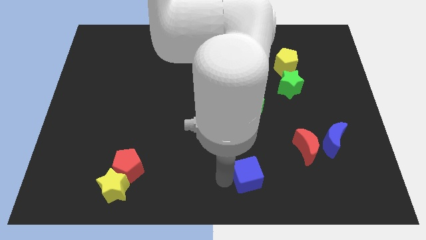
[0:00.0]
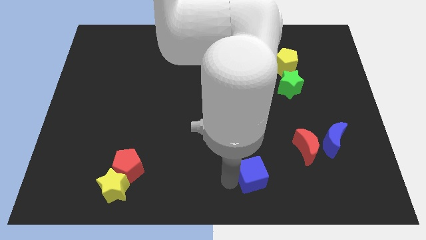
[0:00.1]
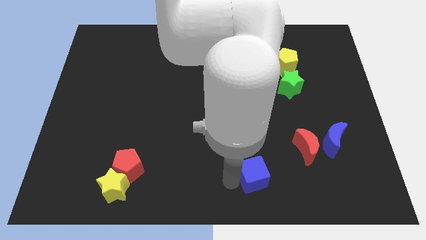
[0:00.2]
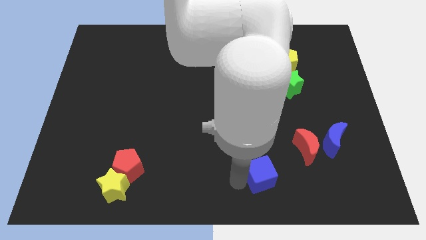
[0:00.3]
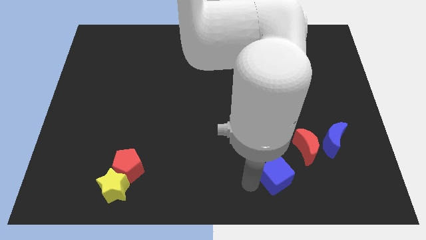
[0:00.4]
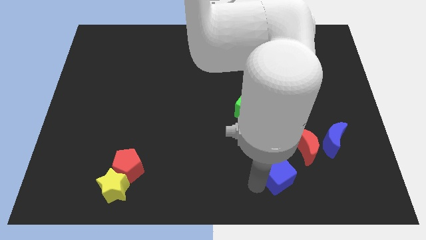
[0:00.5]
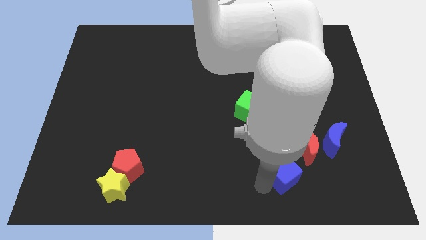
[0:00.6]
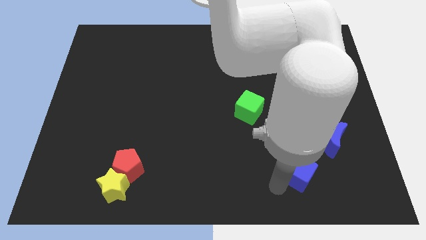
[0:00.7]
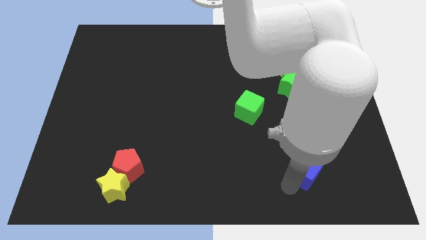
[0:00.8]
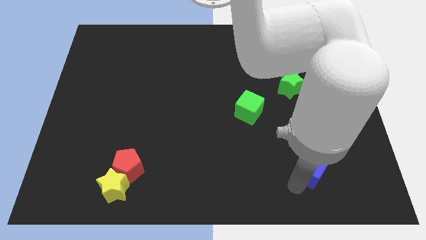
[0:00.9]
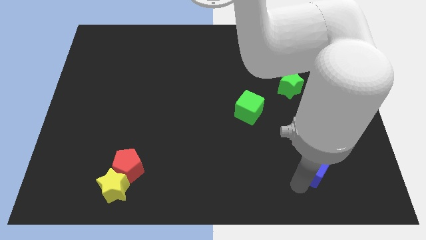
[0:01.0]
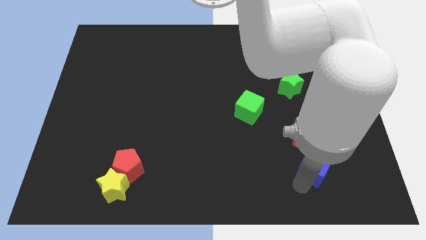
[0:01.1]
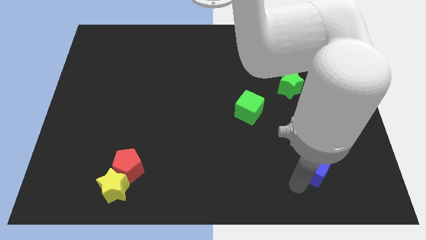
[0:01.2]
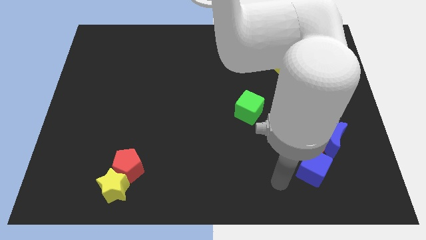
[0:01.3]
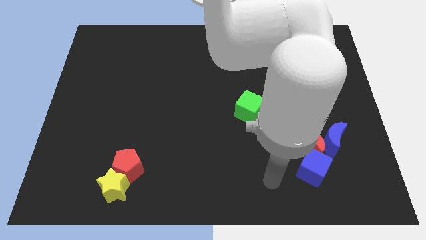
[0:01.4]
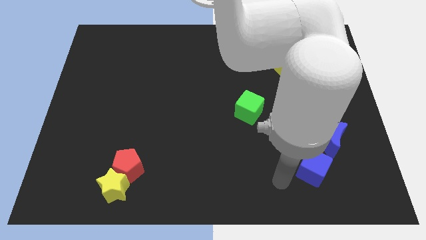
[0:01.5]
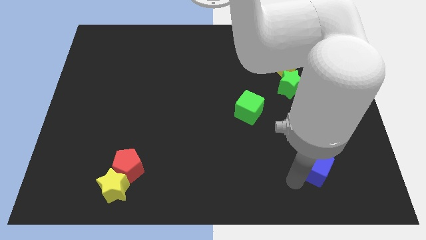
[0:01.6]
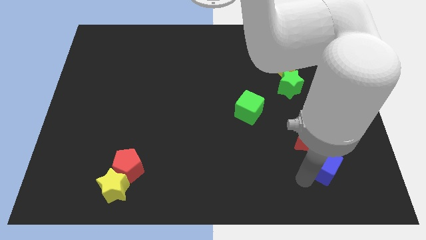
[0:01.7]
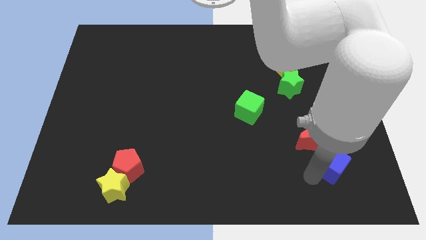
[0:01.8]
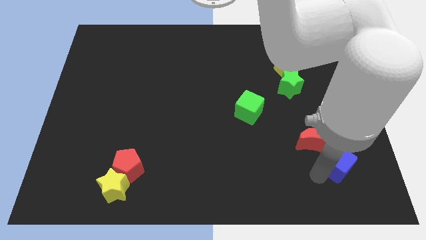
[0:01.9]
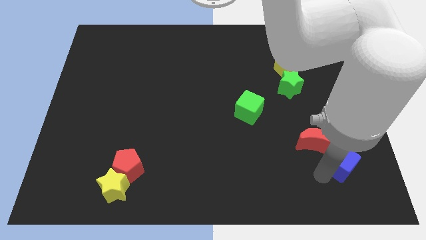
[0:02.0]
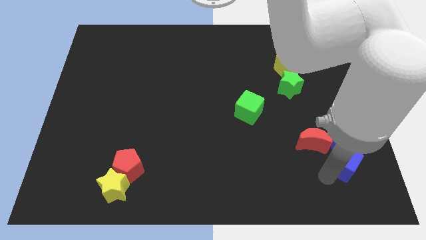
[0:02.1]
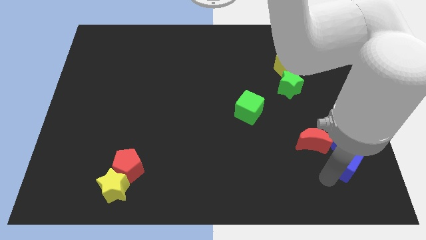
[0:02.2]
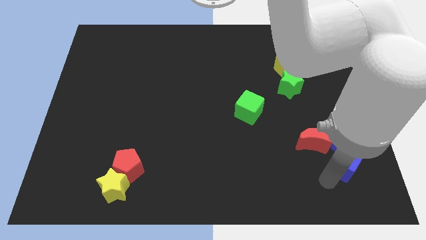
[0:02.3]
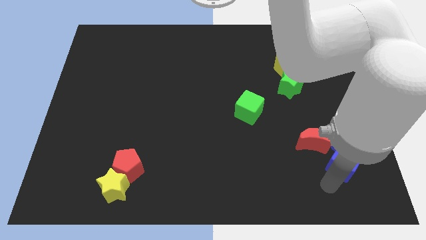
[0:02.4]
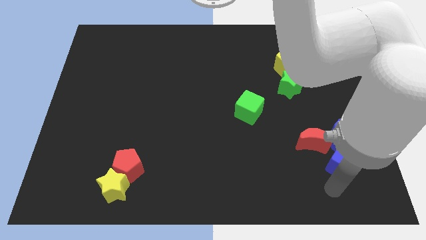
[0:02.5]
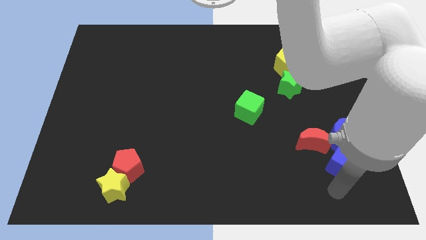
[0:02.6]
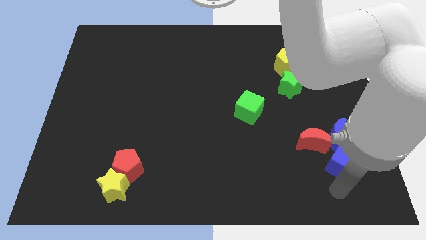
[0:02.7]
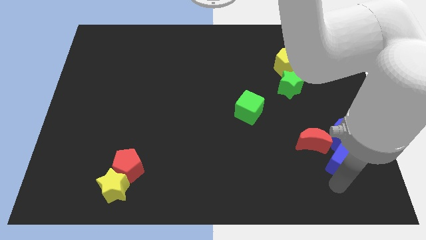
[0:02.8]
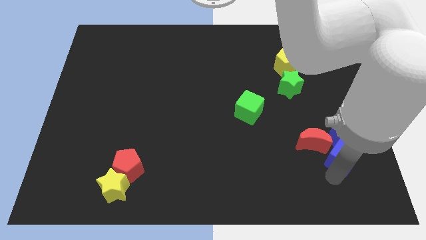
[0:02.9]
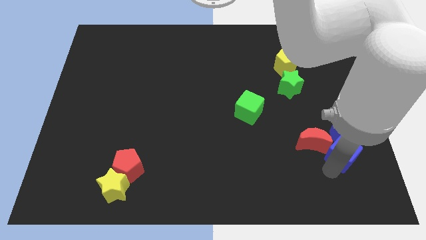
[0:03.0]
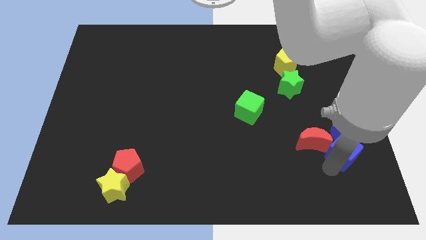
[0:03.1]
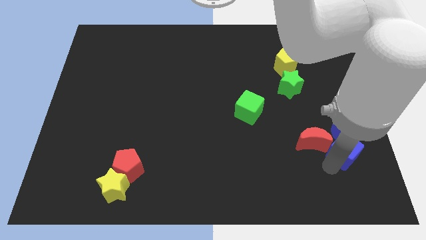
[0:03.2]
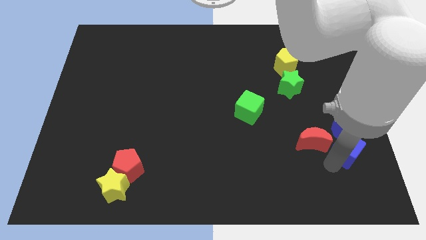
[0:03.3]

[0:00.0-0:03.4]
slide the blue cube below the blue moon

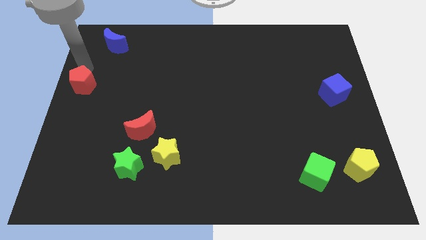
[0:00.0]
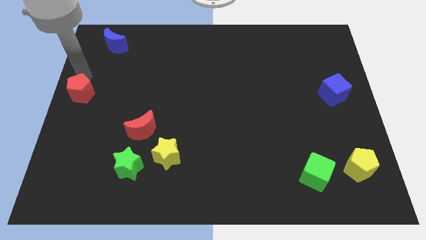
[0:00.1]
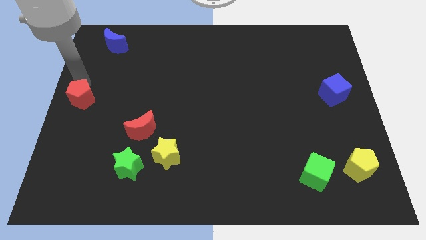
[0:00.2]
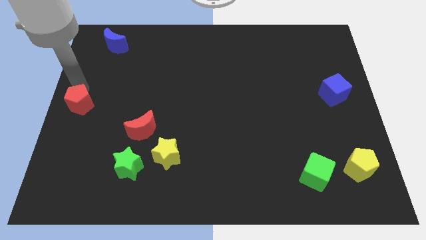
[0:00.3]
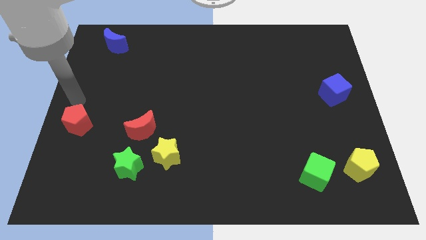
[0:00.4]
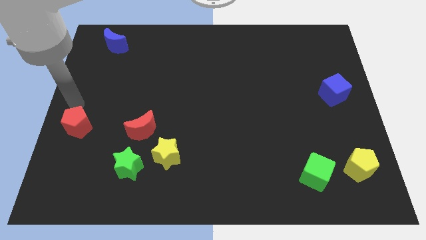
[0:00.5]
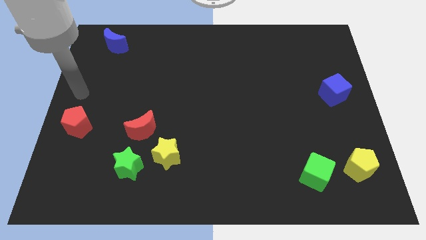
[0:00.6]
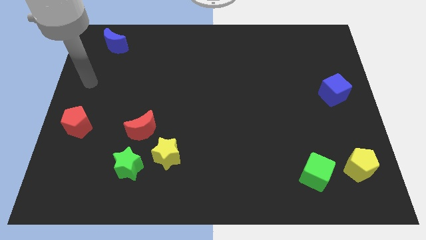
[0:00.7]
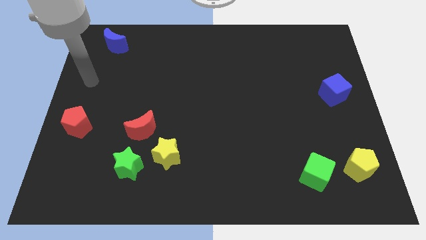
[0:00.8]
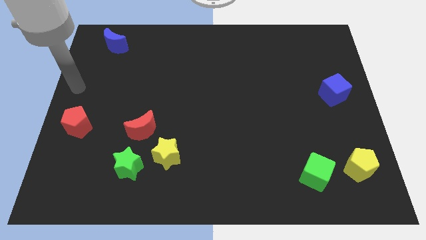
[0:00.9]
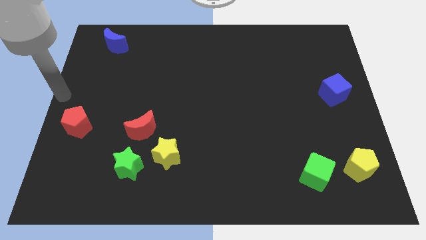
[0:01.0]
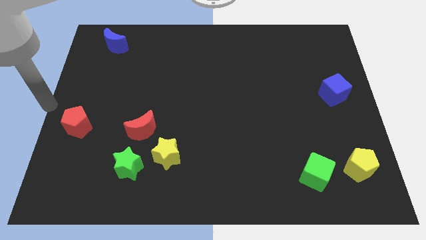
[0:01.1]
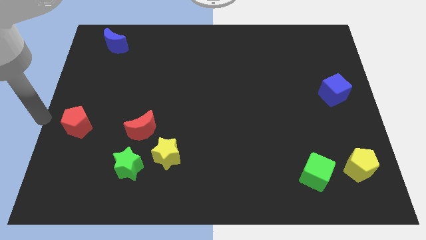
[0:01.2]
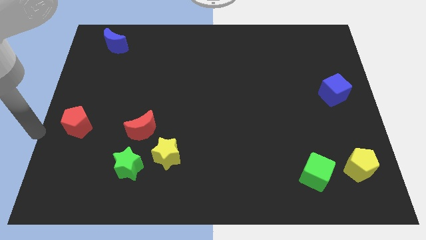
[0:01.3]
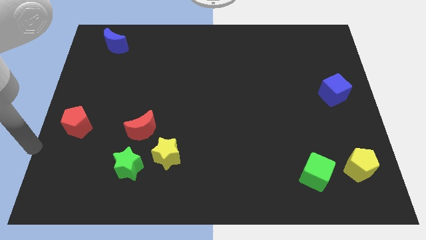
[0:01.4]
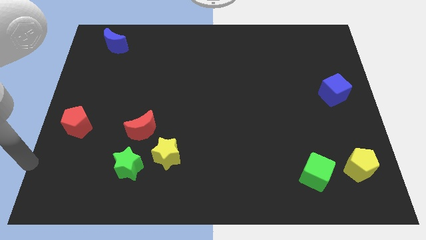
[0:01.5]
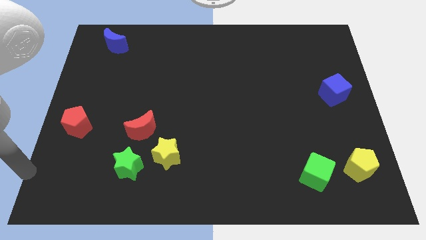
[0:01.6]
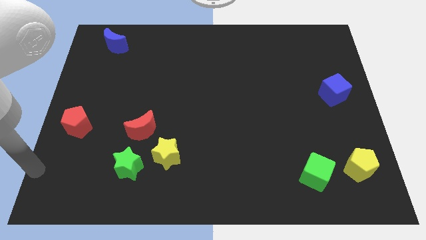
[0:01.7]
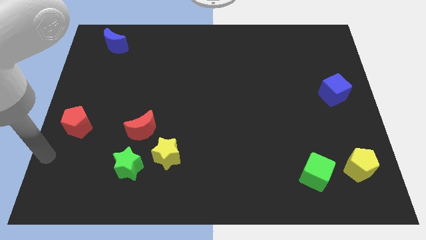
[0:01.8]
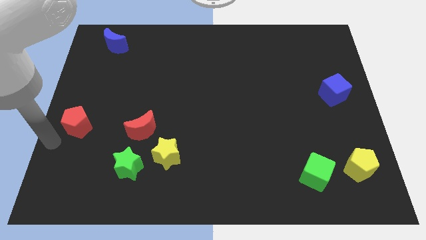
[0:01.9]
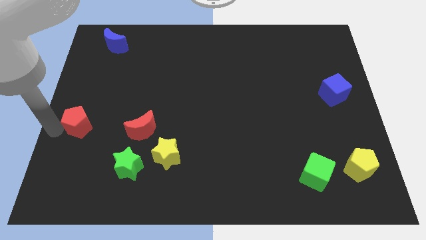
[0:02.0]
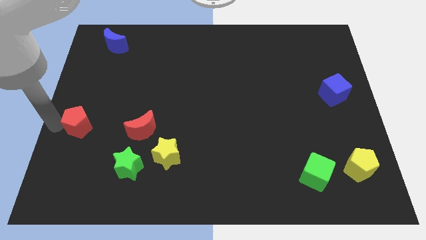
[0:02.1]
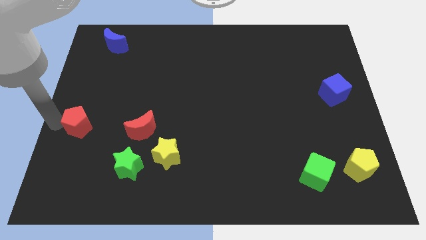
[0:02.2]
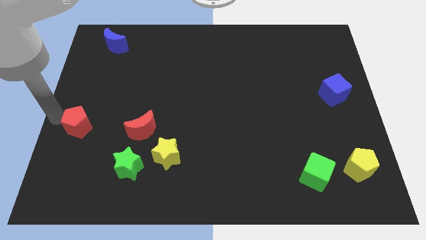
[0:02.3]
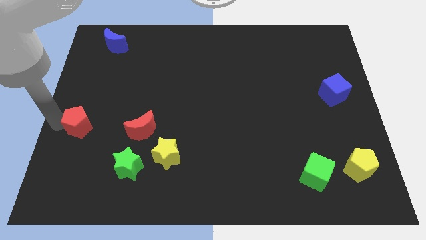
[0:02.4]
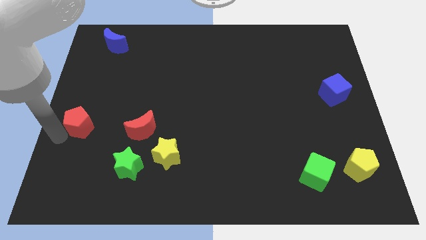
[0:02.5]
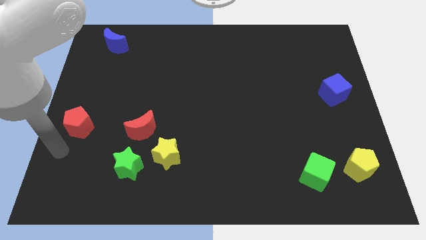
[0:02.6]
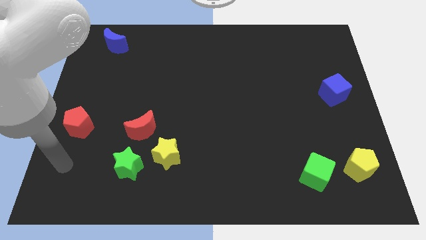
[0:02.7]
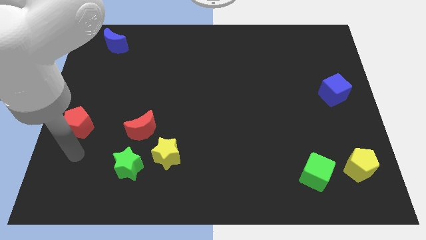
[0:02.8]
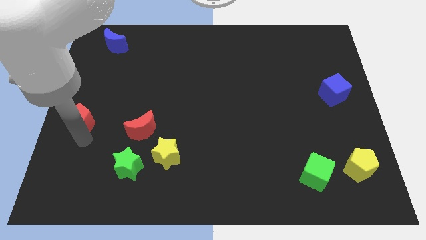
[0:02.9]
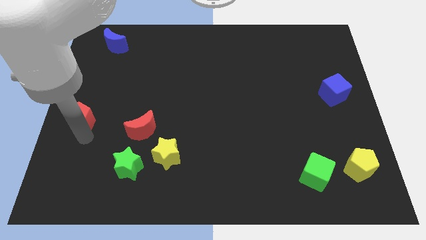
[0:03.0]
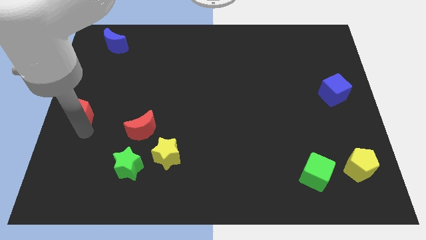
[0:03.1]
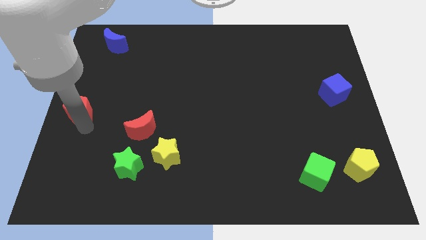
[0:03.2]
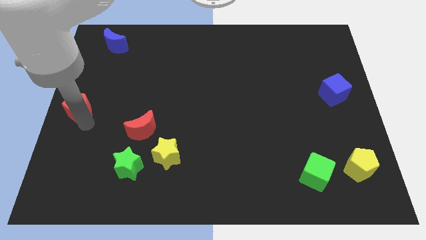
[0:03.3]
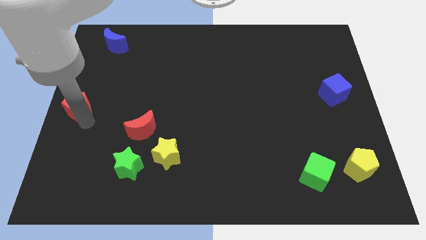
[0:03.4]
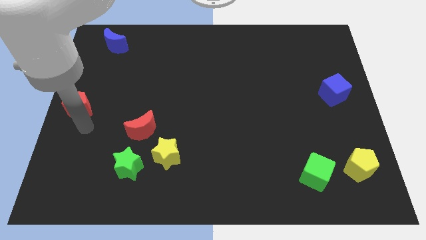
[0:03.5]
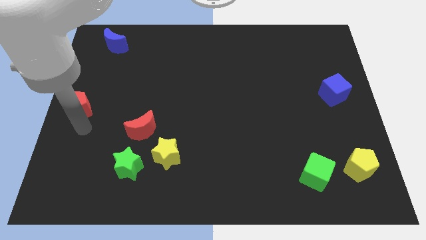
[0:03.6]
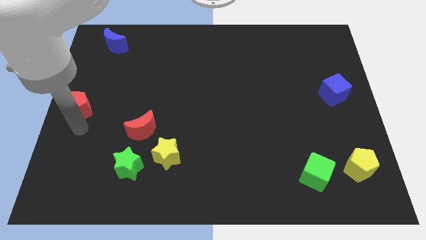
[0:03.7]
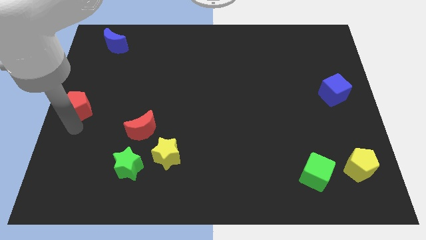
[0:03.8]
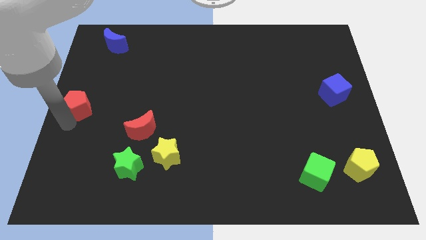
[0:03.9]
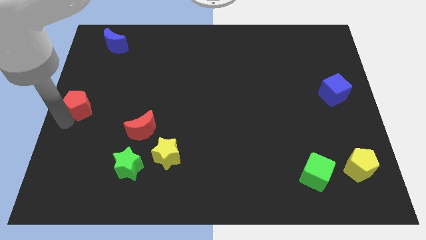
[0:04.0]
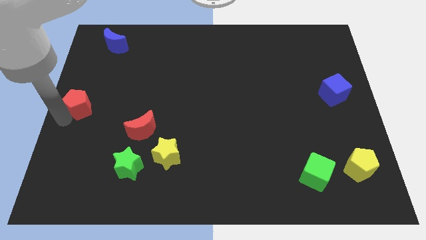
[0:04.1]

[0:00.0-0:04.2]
move the red pentagon slightly towards top and bottom

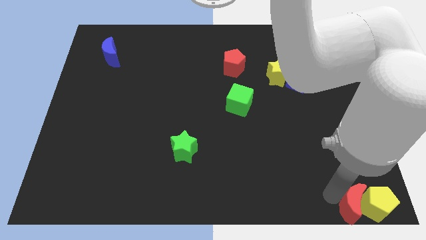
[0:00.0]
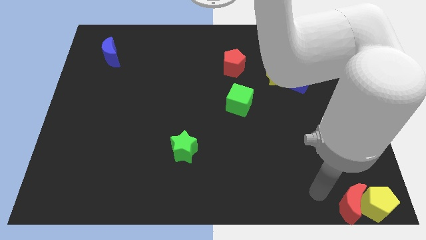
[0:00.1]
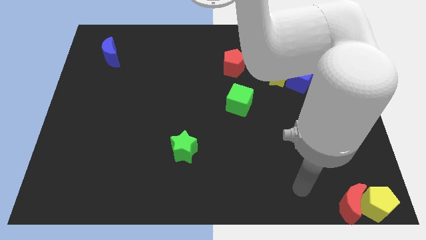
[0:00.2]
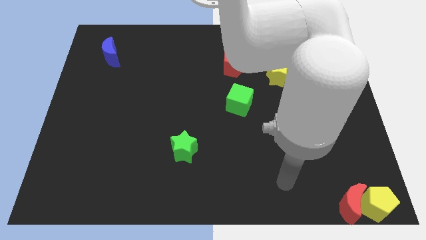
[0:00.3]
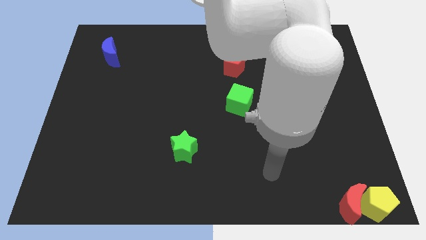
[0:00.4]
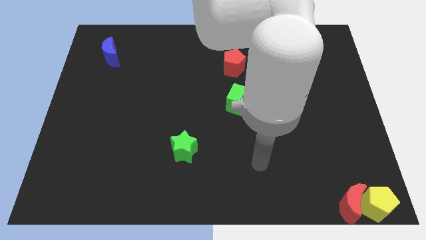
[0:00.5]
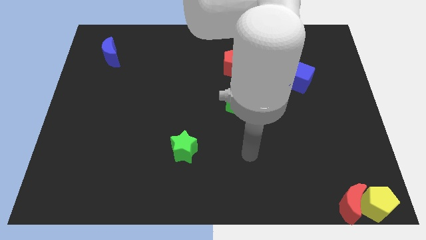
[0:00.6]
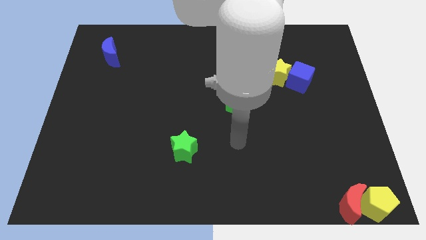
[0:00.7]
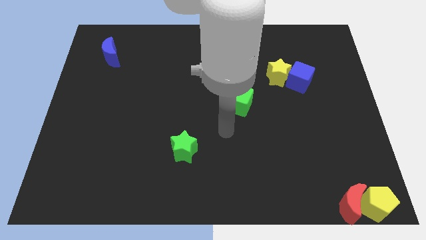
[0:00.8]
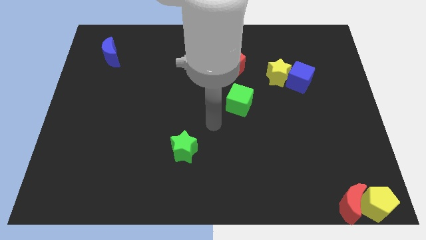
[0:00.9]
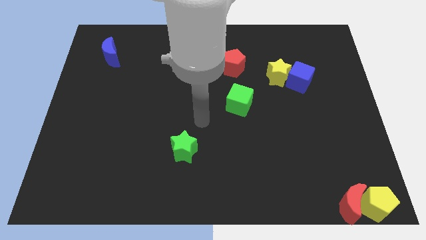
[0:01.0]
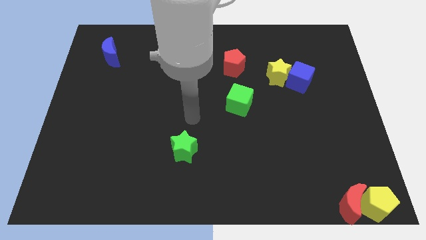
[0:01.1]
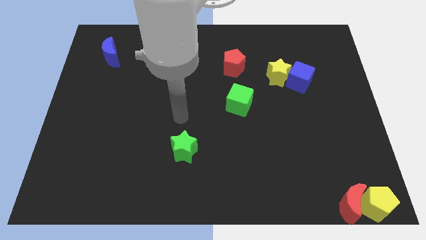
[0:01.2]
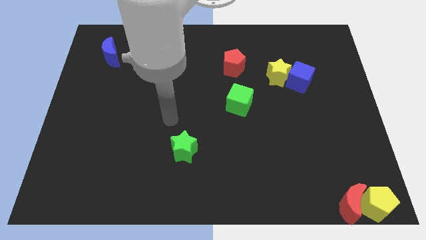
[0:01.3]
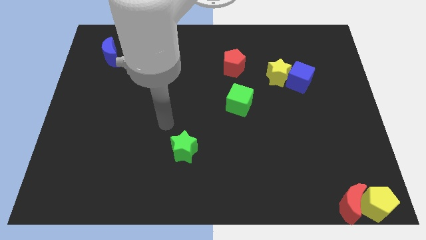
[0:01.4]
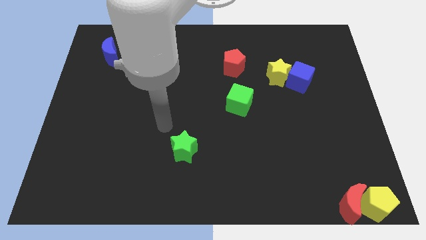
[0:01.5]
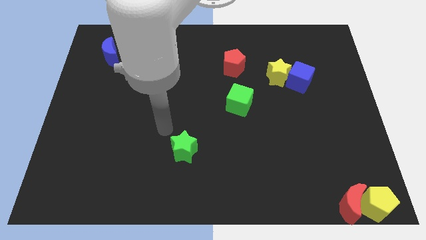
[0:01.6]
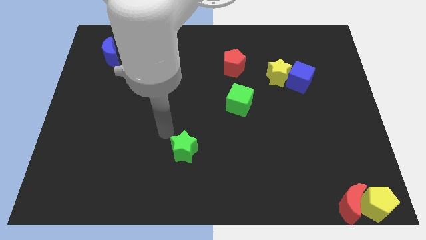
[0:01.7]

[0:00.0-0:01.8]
move the arm away from the red moon
